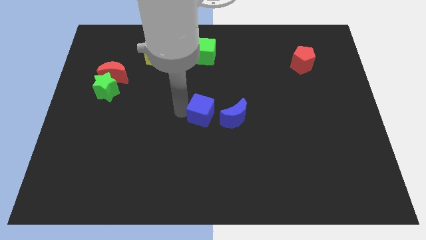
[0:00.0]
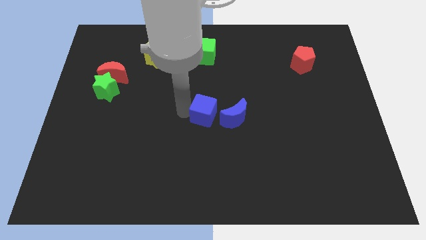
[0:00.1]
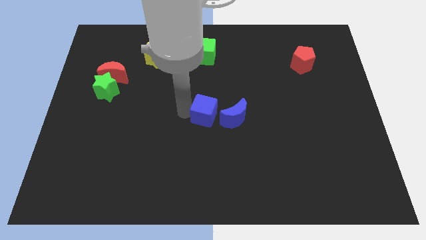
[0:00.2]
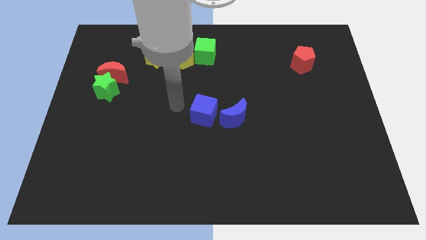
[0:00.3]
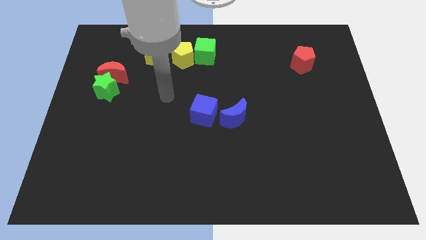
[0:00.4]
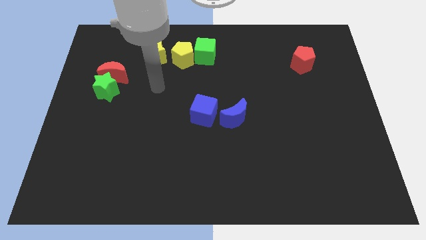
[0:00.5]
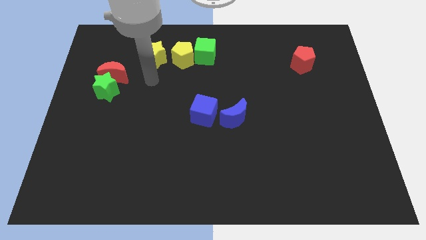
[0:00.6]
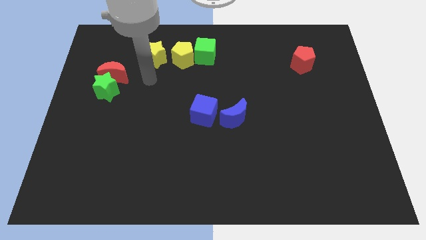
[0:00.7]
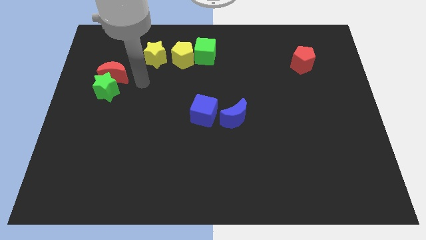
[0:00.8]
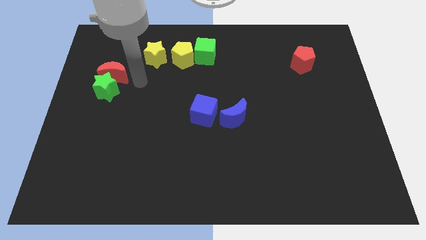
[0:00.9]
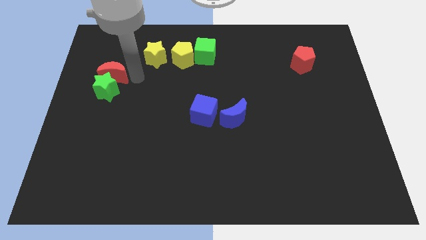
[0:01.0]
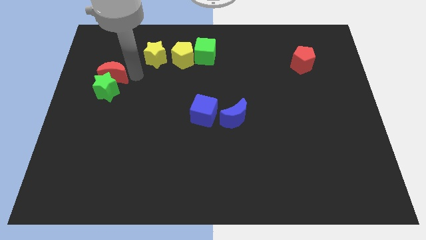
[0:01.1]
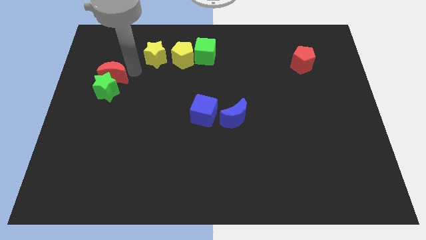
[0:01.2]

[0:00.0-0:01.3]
place arm in between red moon an yellow star

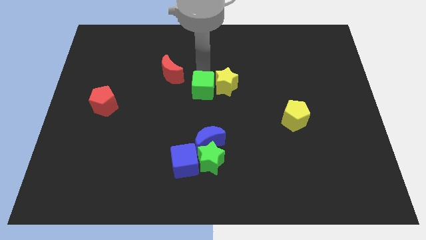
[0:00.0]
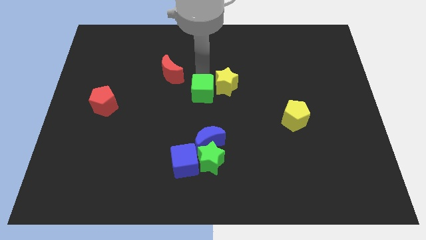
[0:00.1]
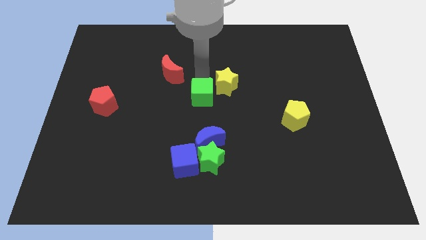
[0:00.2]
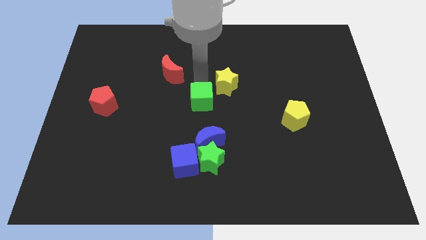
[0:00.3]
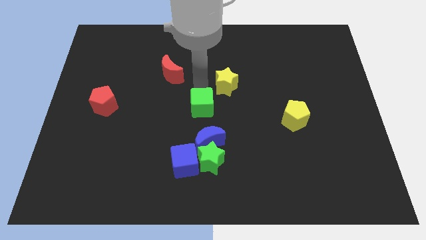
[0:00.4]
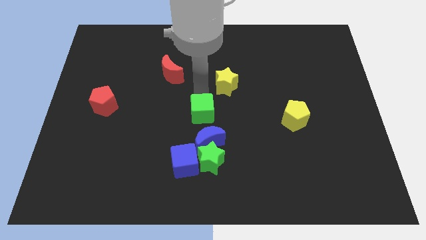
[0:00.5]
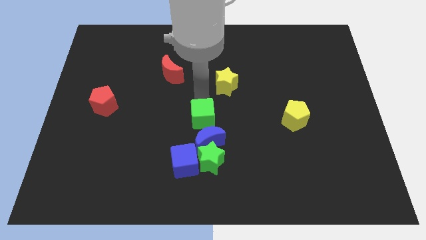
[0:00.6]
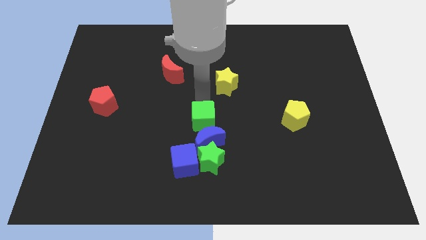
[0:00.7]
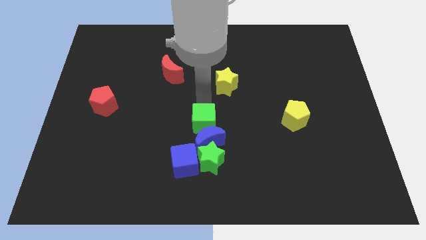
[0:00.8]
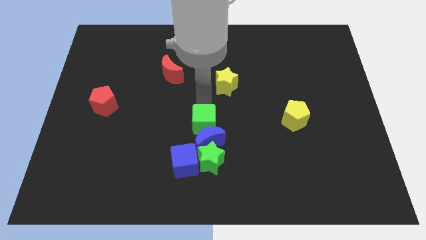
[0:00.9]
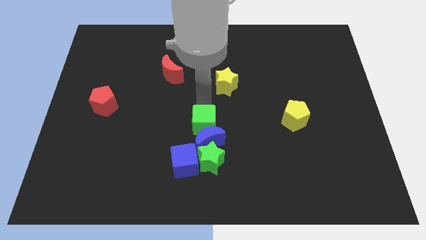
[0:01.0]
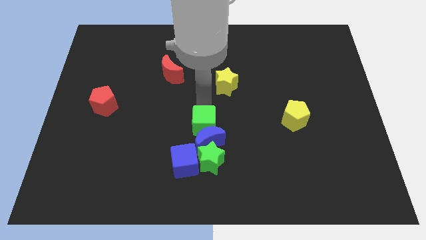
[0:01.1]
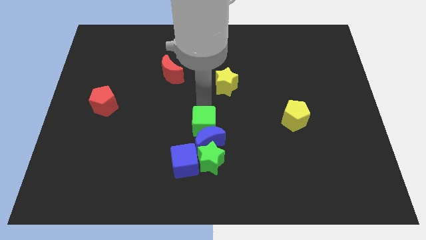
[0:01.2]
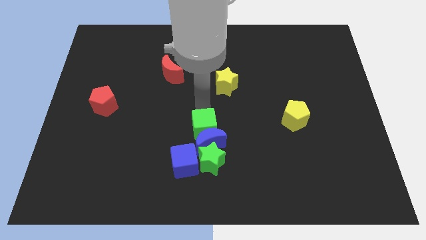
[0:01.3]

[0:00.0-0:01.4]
drag the green cube into the top side of the blue crescent

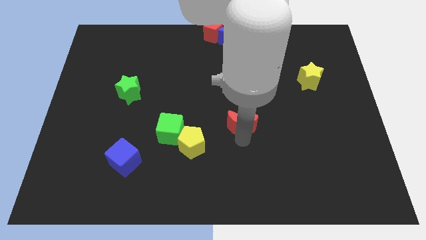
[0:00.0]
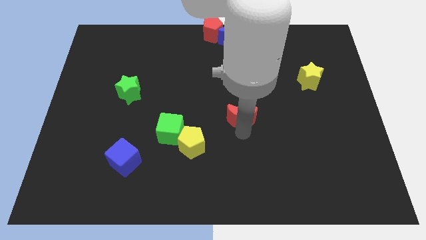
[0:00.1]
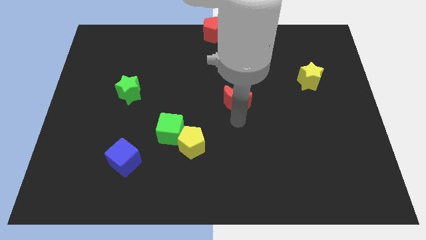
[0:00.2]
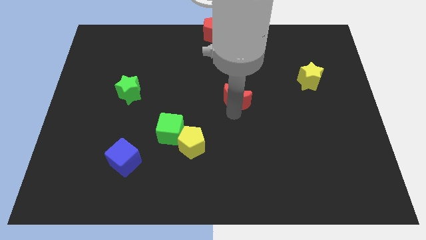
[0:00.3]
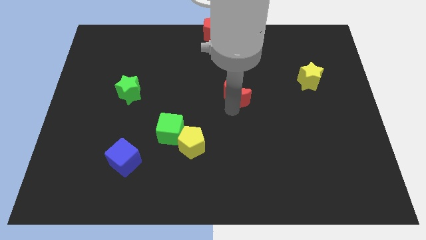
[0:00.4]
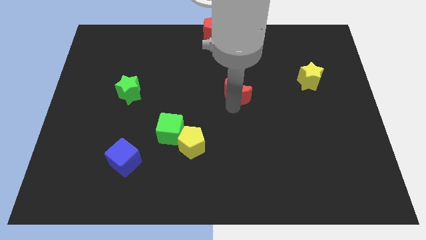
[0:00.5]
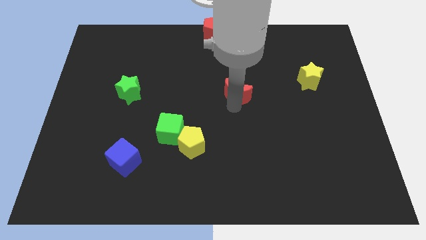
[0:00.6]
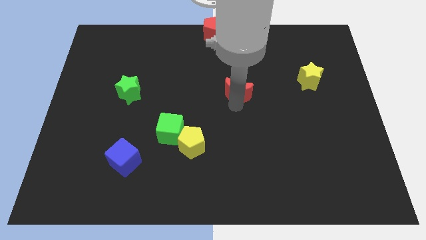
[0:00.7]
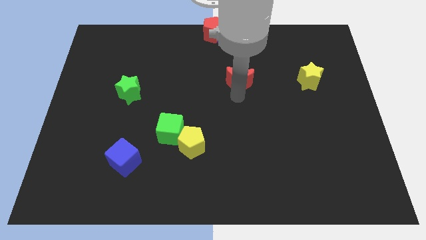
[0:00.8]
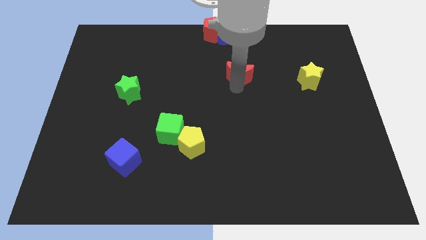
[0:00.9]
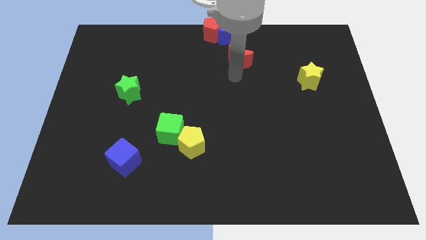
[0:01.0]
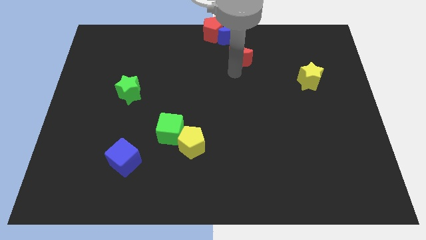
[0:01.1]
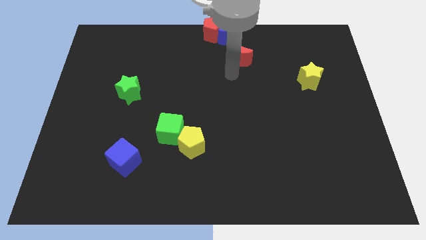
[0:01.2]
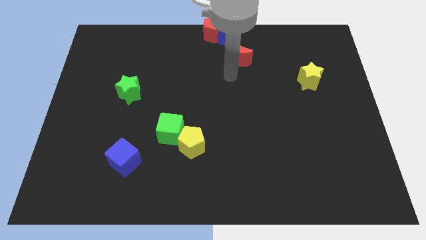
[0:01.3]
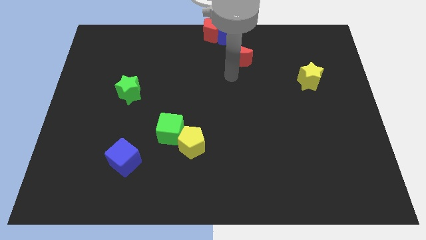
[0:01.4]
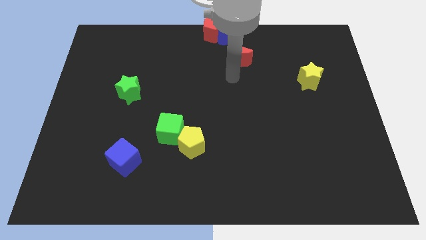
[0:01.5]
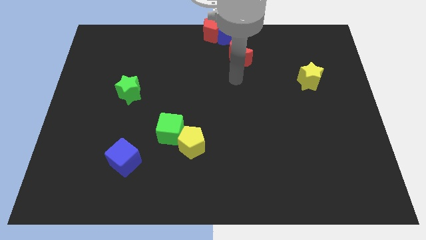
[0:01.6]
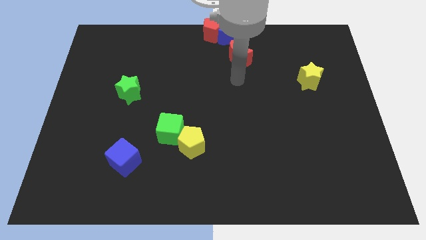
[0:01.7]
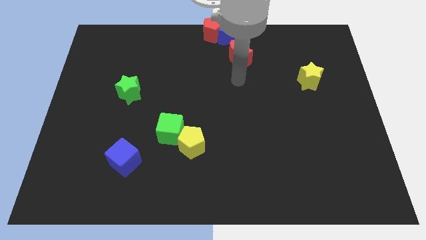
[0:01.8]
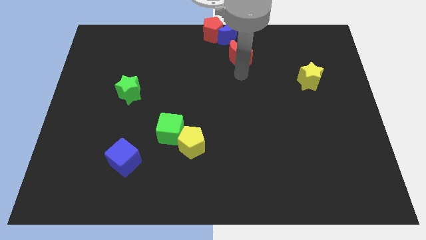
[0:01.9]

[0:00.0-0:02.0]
drag the red pentagon towards blue moon

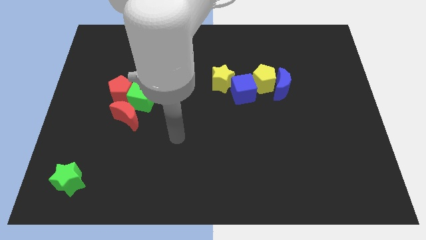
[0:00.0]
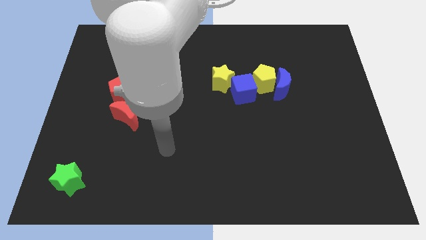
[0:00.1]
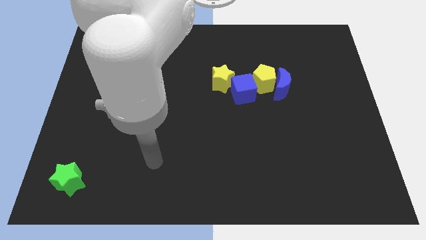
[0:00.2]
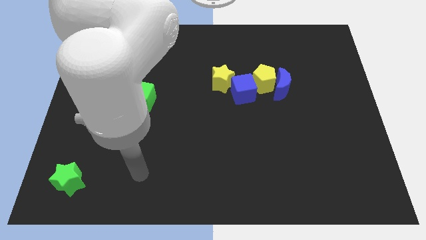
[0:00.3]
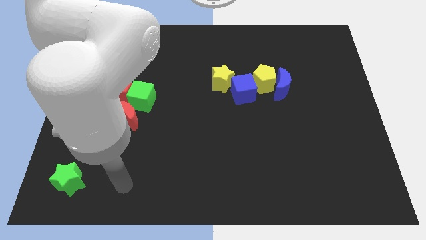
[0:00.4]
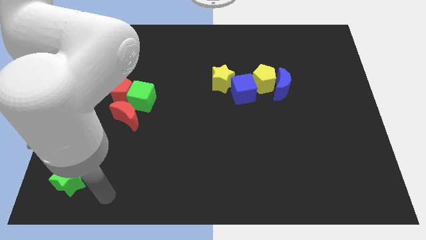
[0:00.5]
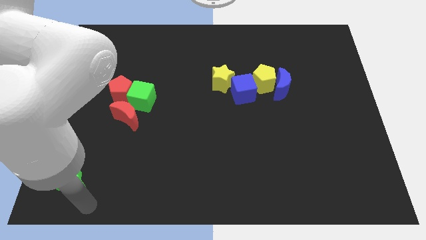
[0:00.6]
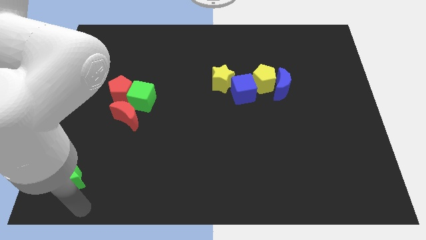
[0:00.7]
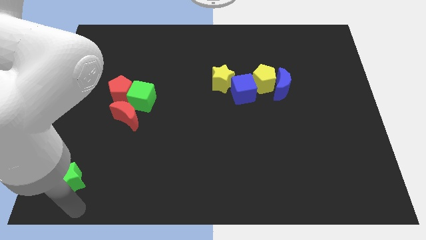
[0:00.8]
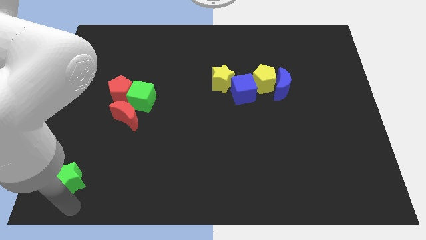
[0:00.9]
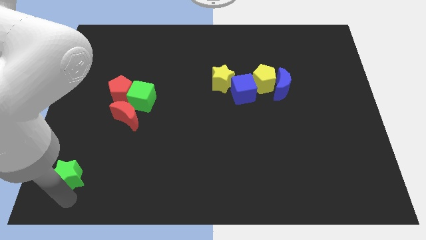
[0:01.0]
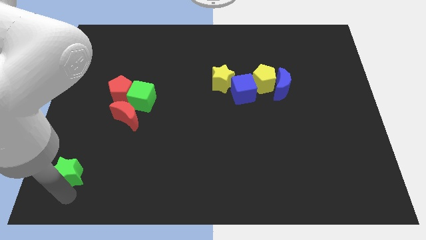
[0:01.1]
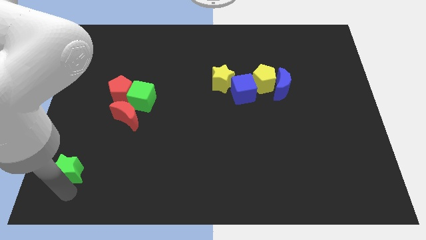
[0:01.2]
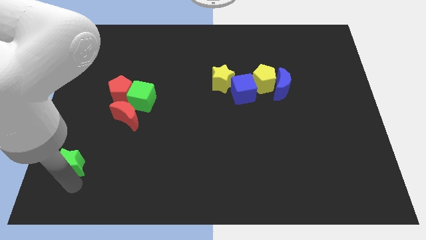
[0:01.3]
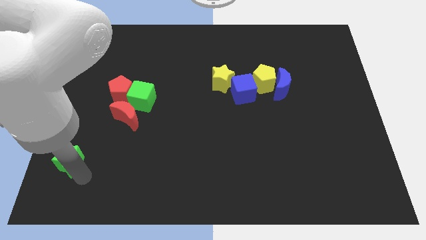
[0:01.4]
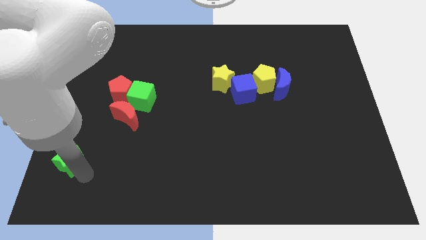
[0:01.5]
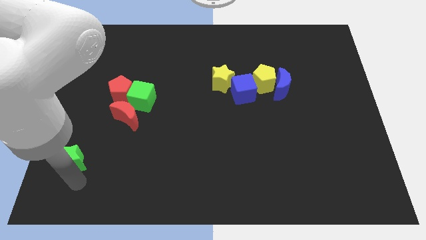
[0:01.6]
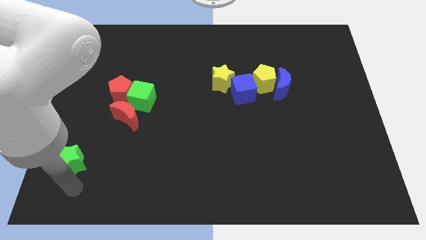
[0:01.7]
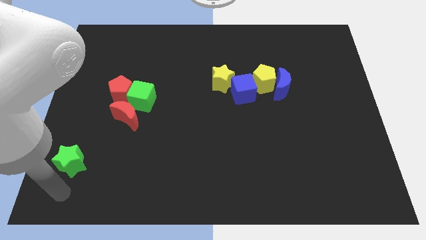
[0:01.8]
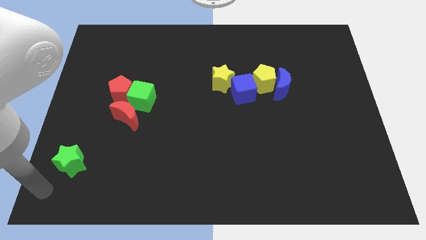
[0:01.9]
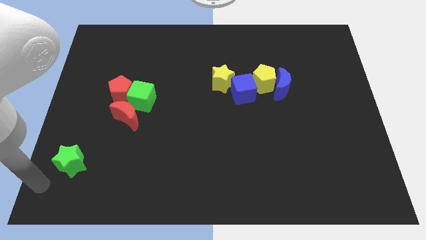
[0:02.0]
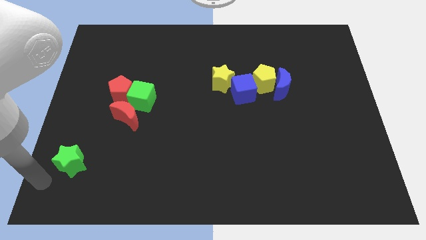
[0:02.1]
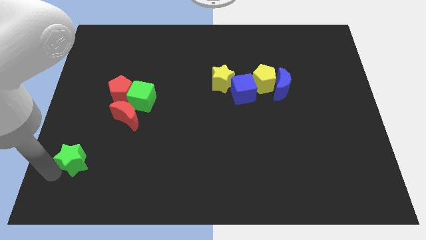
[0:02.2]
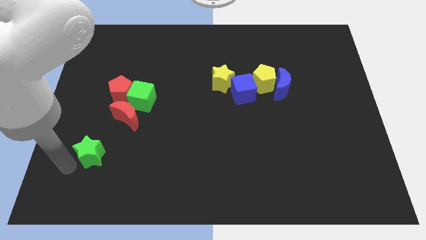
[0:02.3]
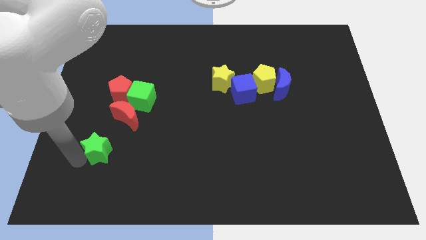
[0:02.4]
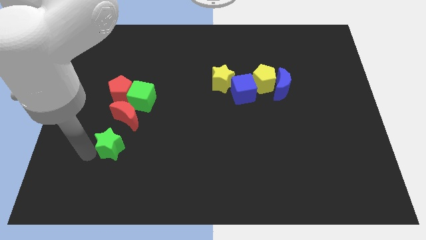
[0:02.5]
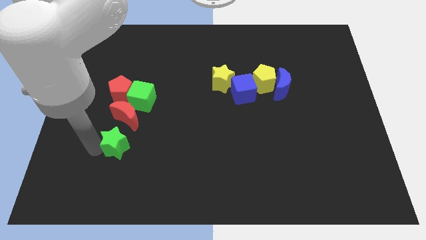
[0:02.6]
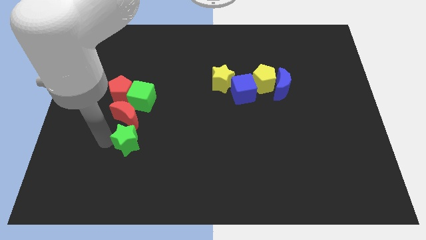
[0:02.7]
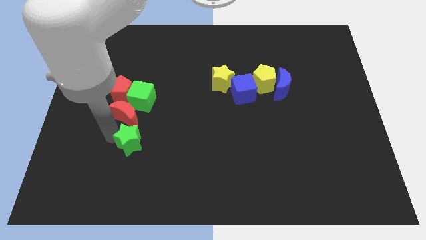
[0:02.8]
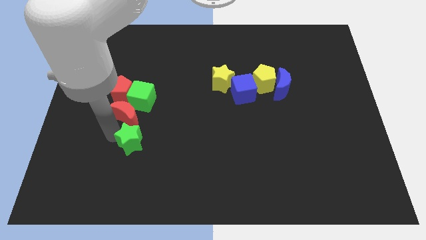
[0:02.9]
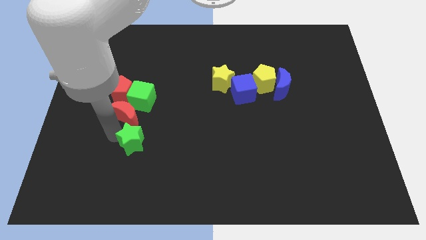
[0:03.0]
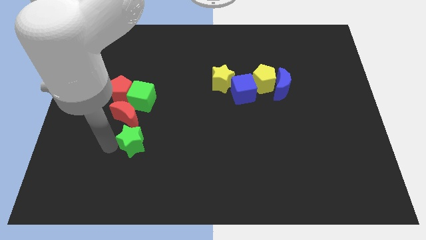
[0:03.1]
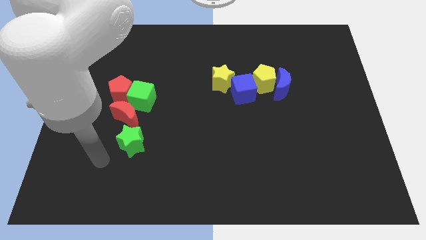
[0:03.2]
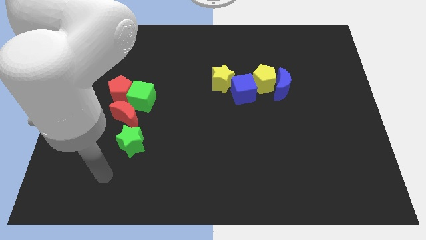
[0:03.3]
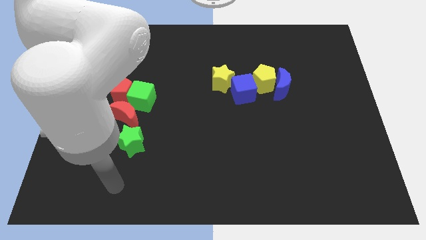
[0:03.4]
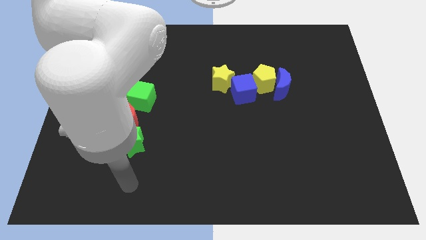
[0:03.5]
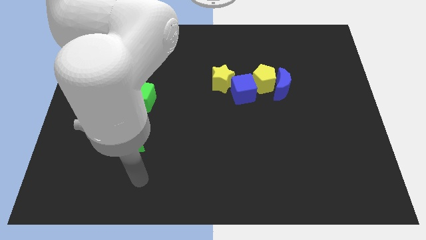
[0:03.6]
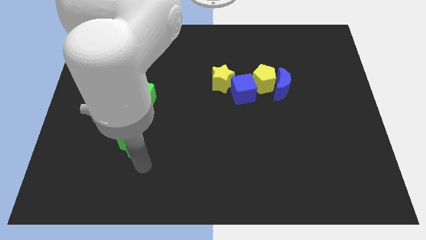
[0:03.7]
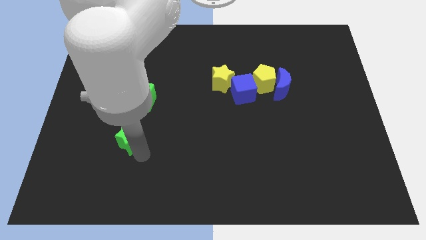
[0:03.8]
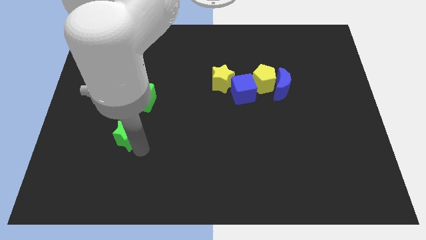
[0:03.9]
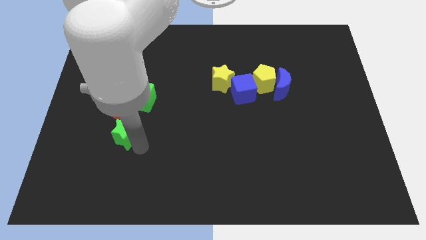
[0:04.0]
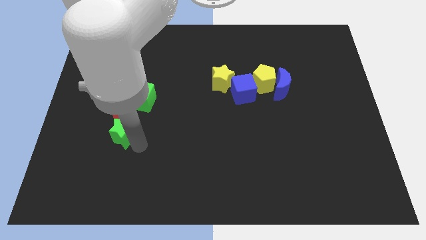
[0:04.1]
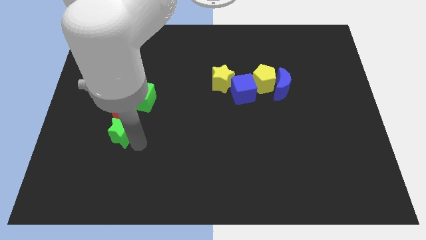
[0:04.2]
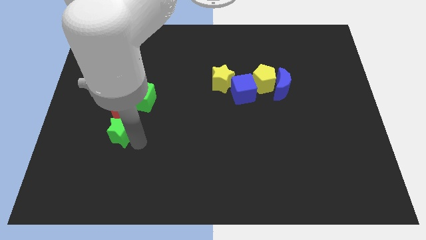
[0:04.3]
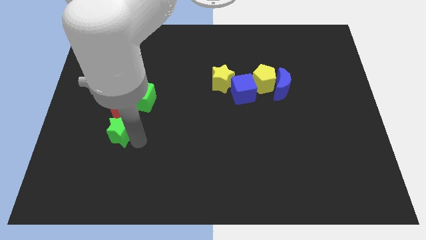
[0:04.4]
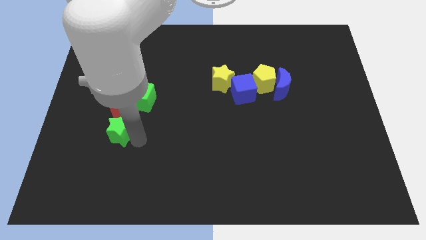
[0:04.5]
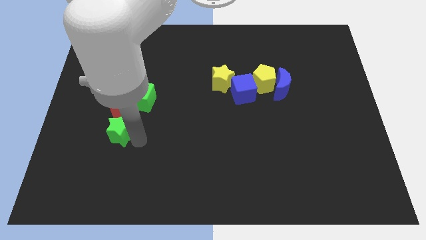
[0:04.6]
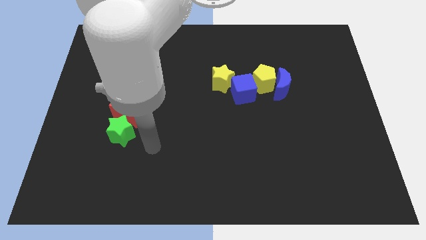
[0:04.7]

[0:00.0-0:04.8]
bring the green star at the bottom side of the red moon
